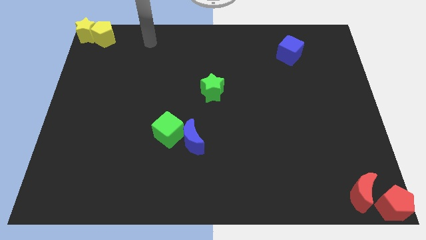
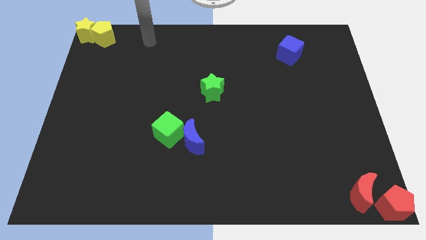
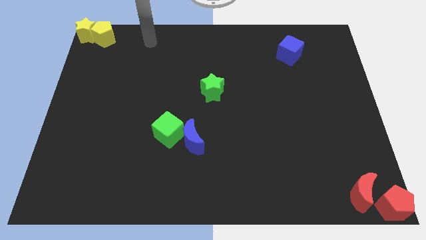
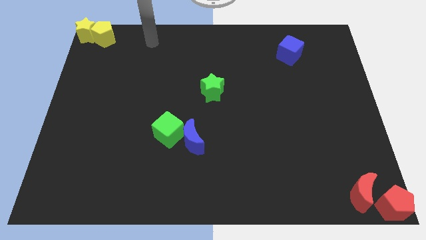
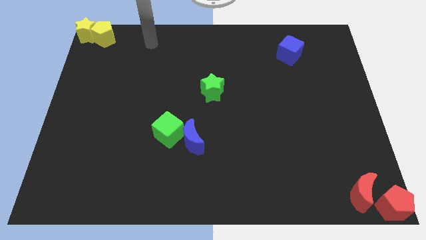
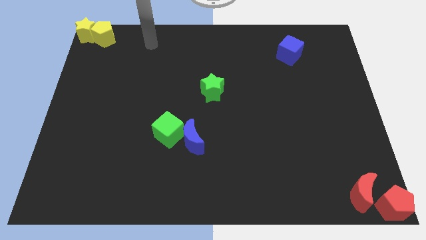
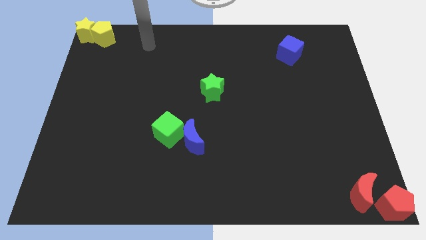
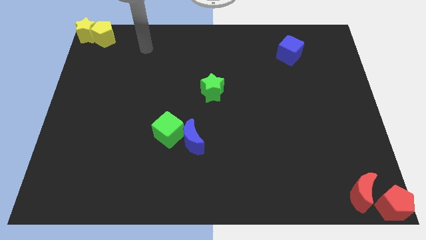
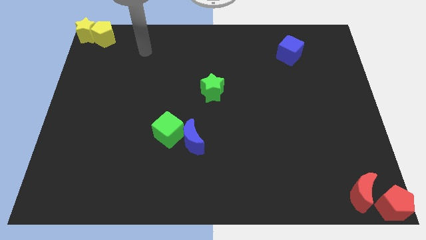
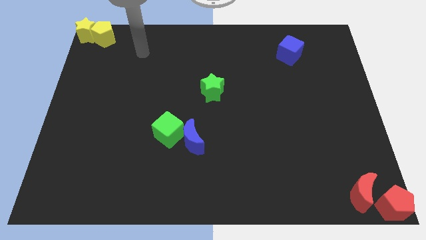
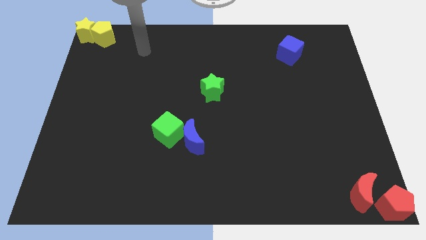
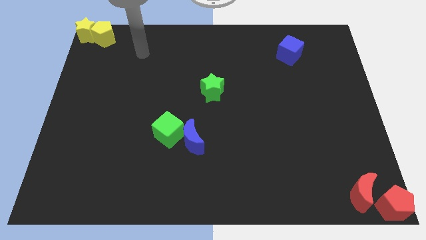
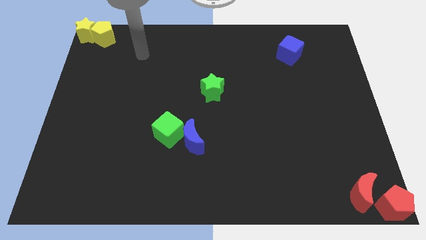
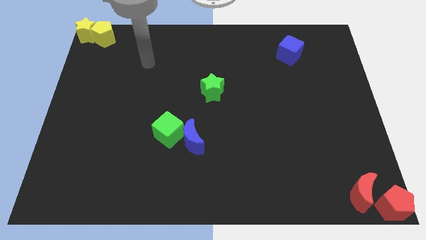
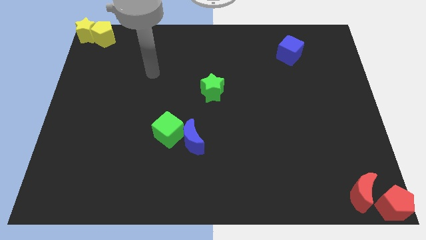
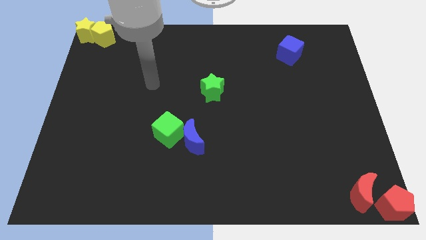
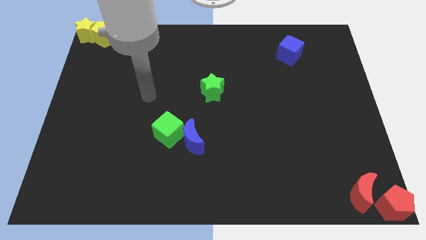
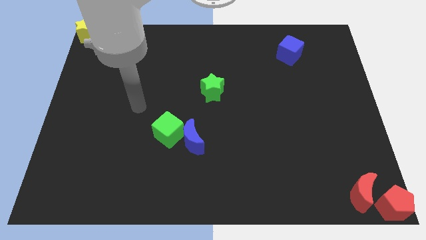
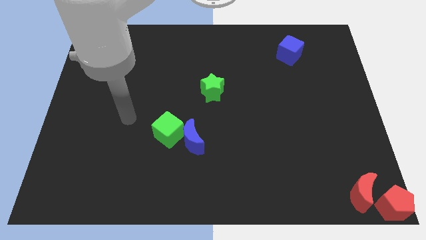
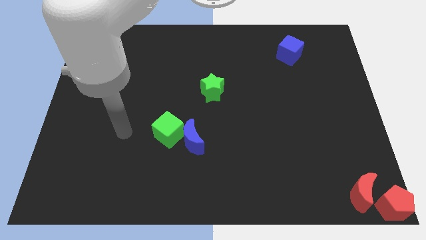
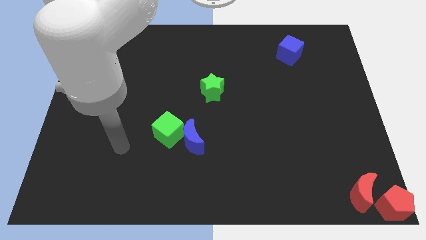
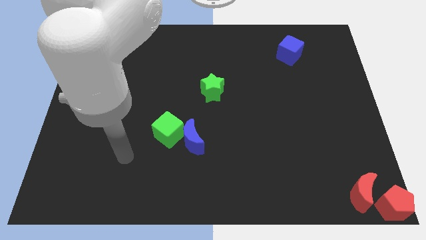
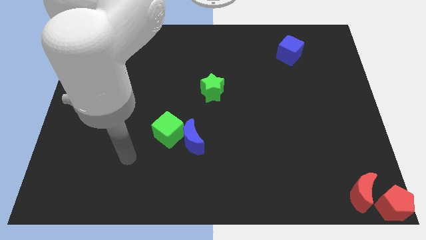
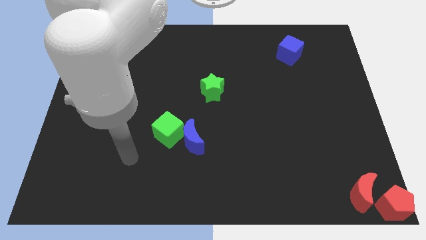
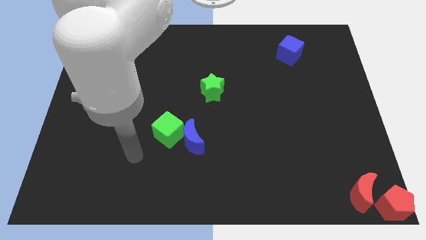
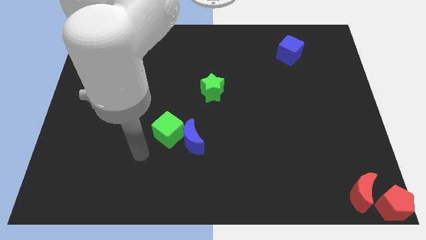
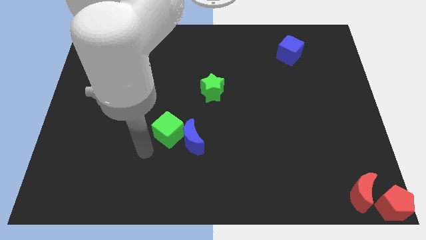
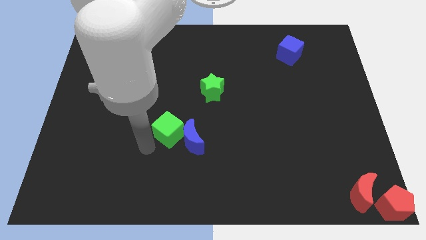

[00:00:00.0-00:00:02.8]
place your arm at the bottom left side of green cube

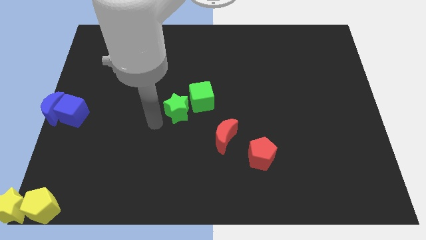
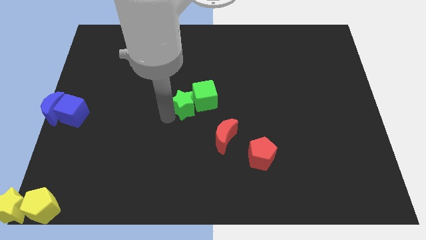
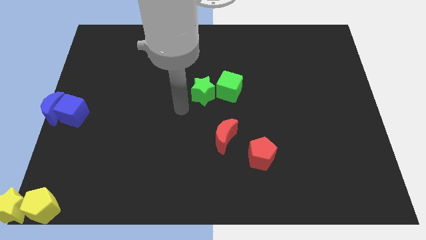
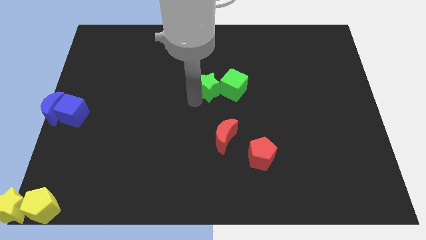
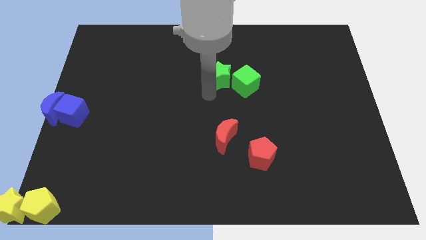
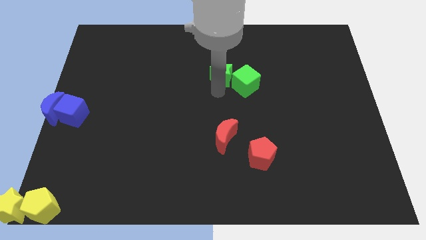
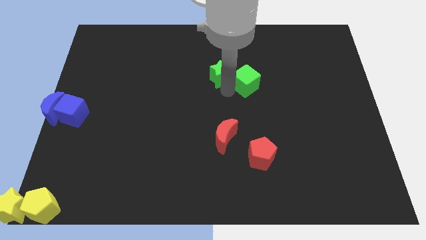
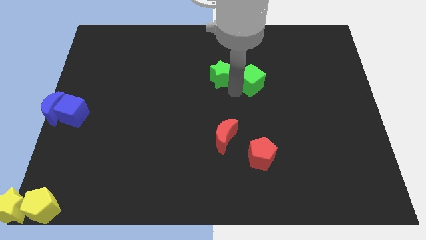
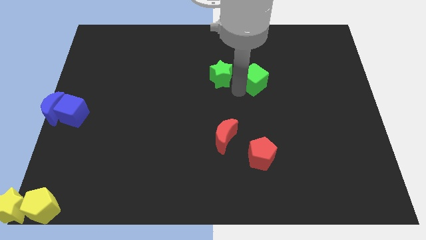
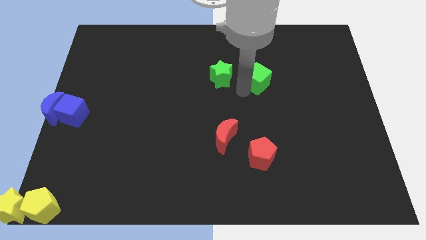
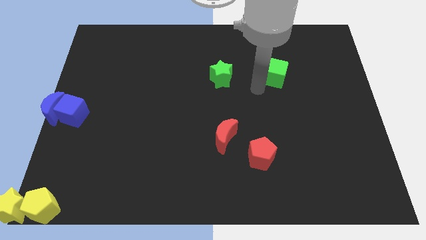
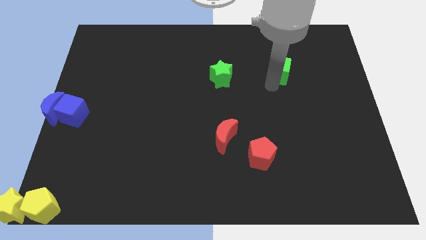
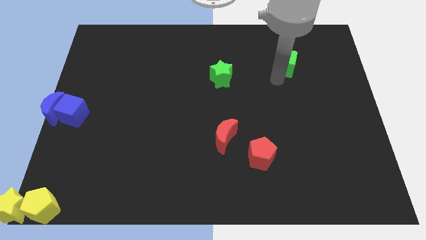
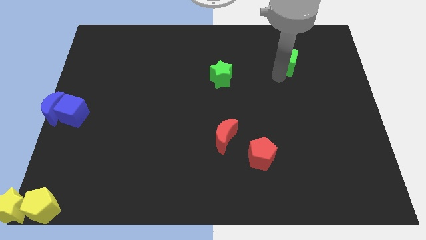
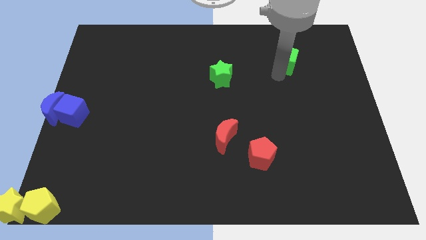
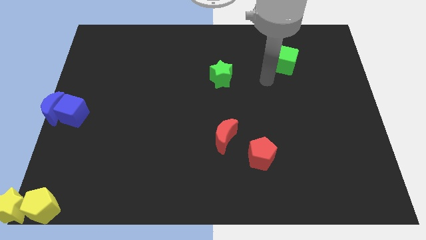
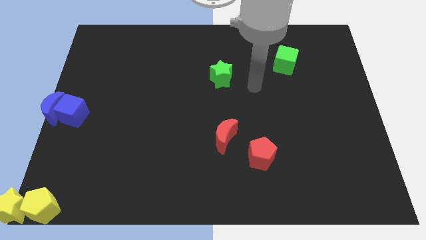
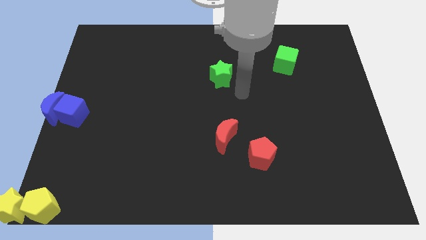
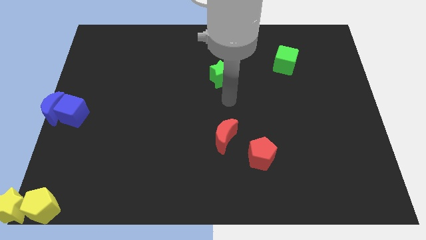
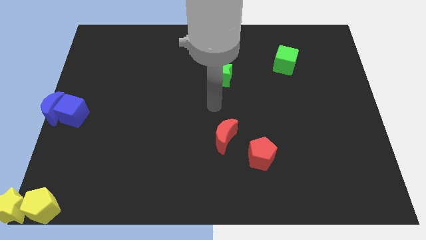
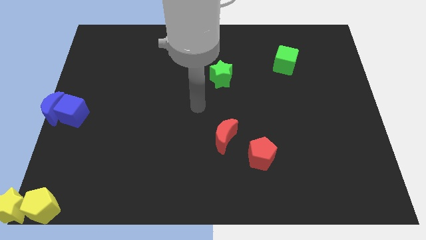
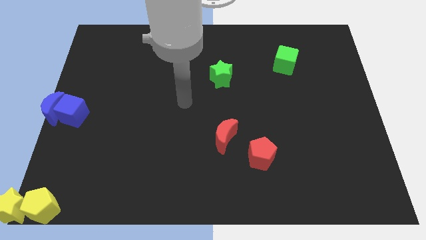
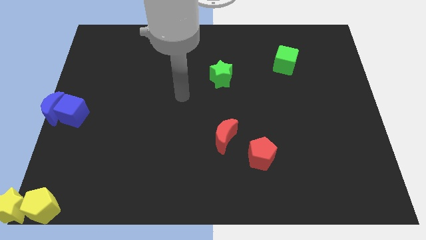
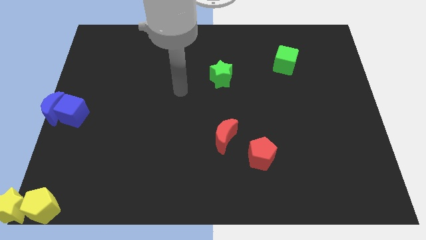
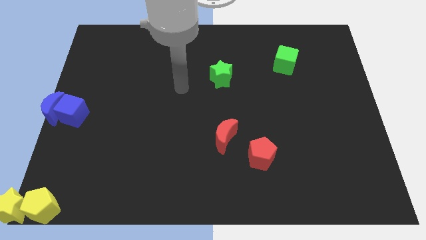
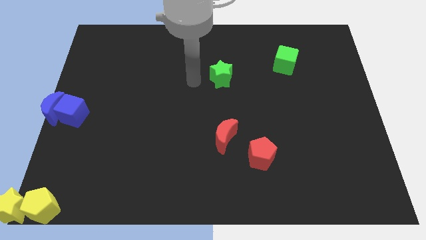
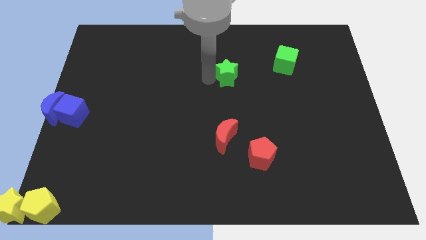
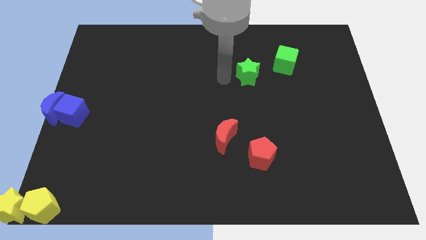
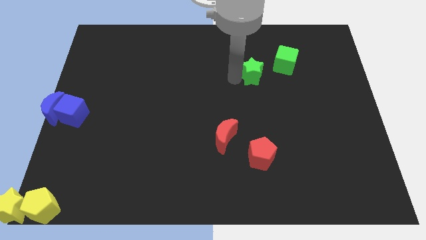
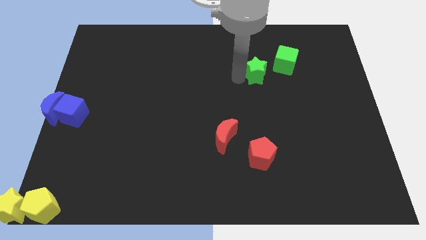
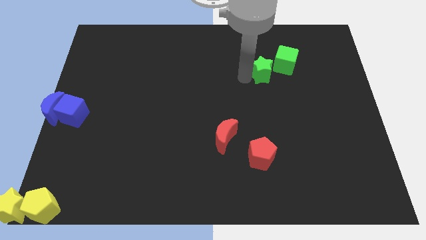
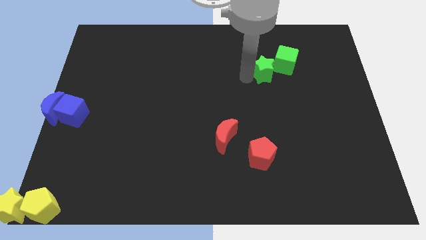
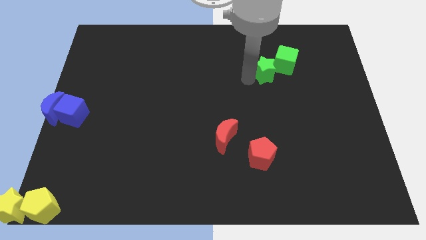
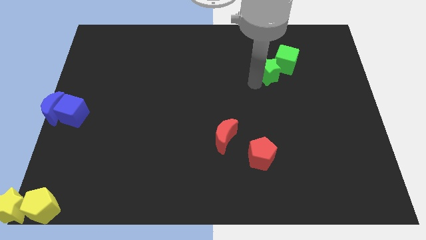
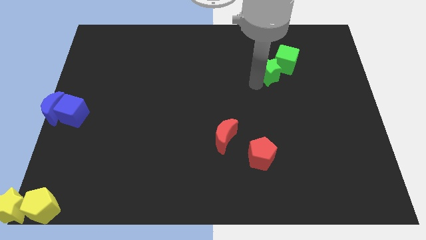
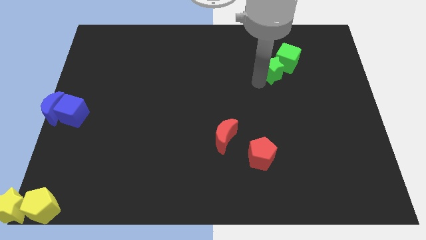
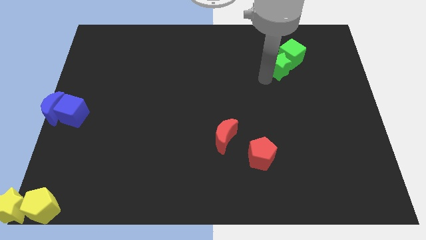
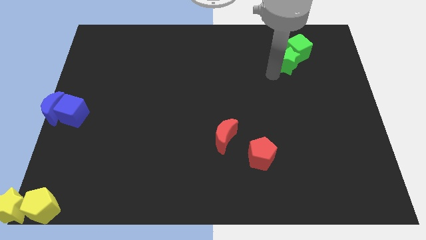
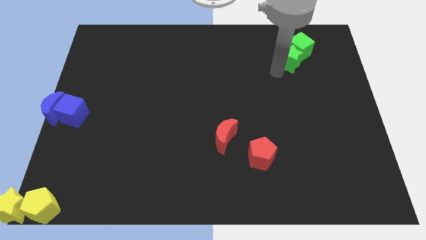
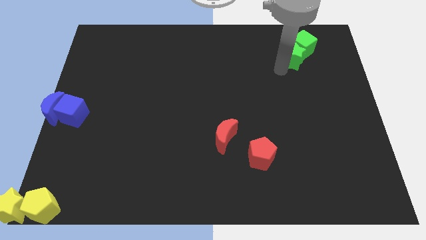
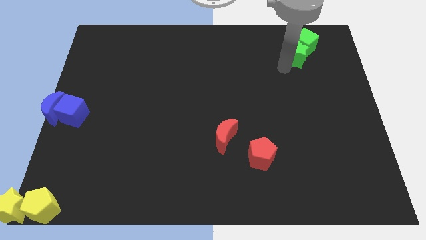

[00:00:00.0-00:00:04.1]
move the green blocks towards top right side

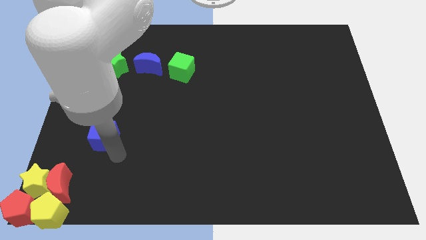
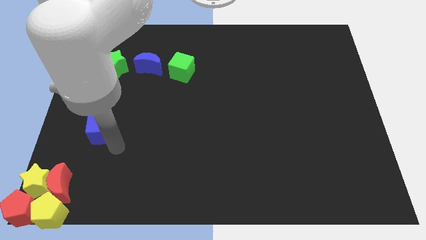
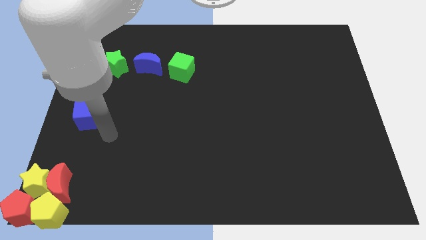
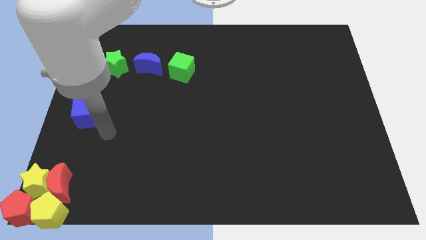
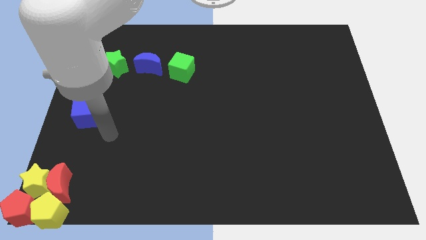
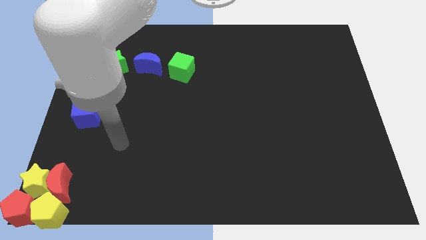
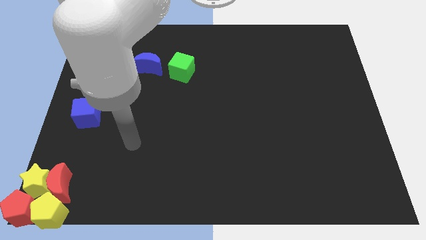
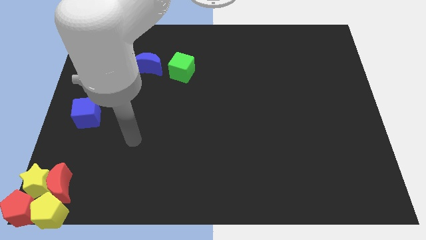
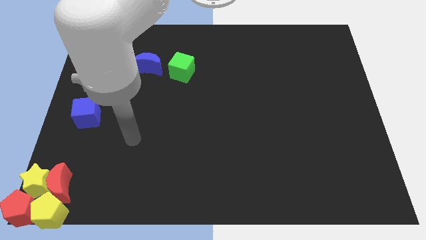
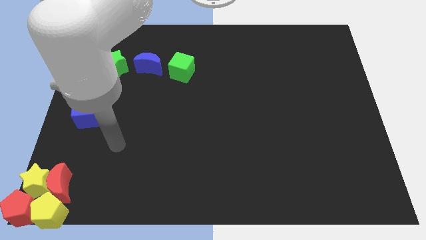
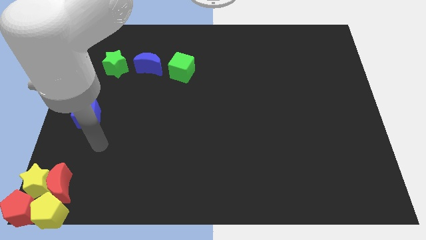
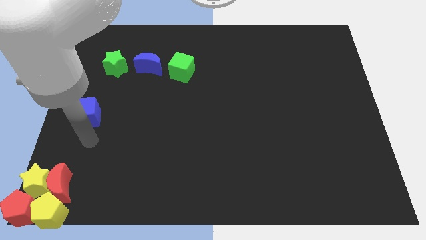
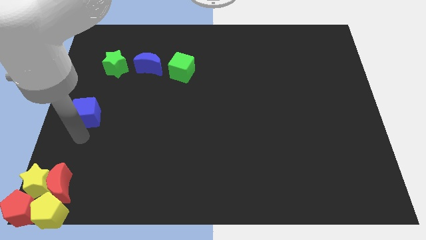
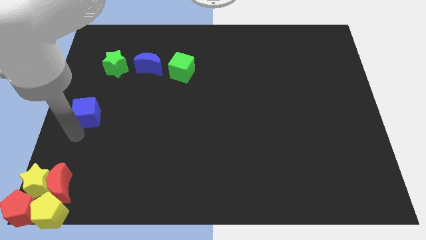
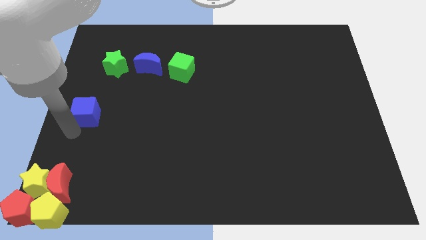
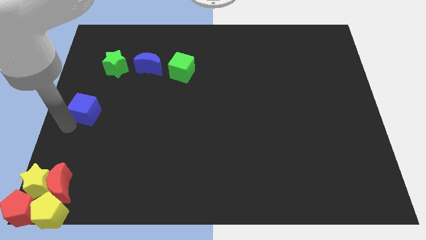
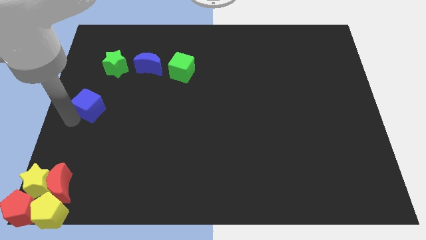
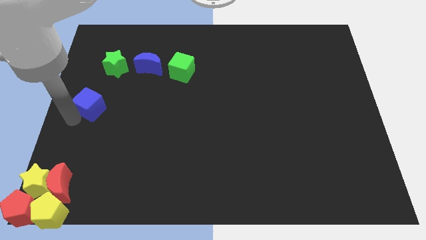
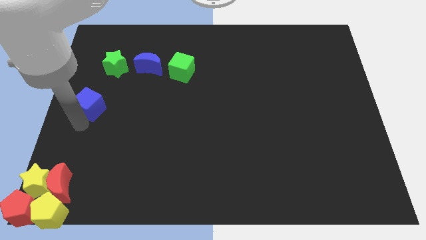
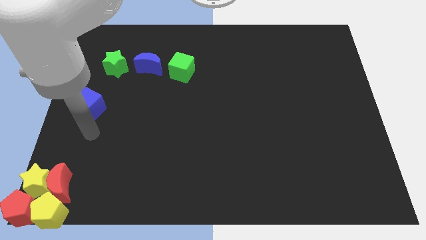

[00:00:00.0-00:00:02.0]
push the blue cube slightly upwards

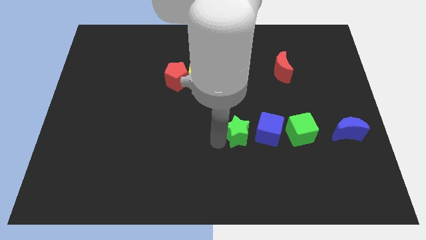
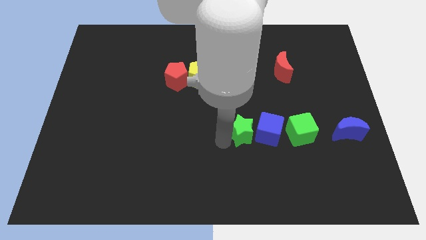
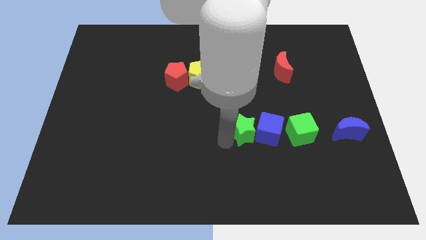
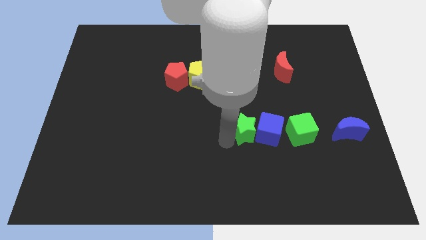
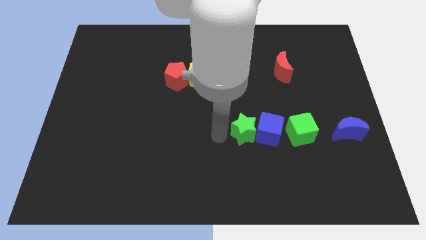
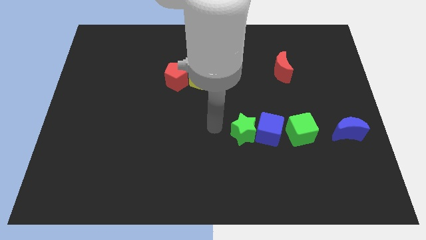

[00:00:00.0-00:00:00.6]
push the green star slightly towards the blue cube
